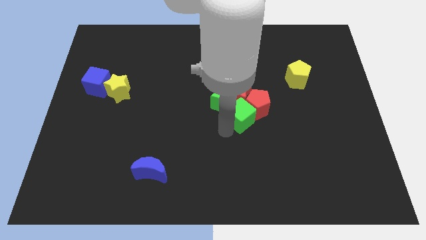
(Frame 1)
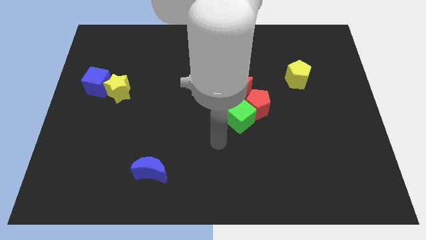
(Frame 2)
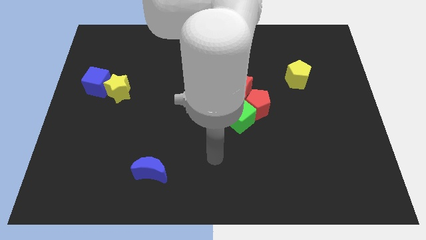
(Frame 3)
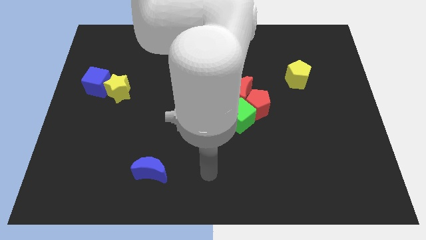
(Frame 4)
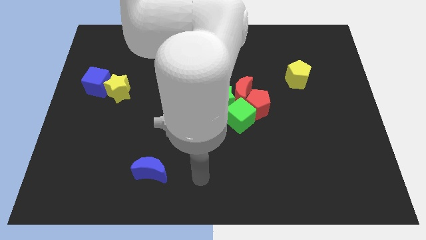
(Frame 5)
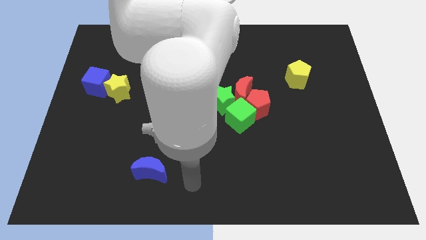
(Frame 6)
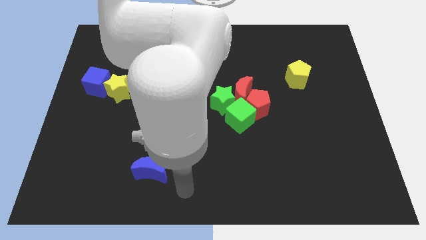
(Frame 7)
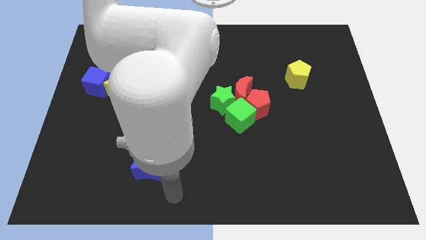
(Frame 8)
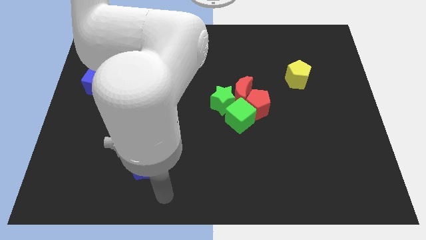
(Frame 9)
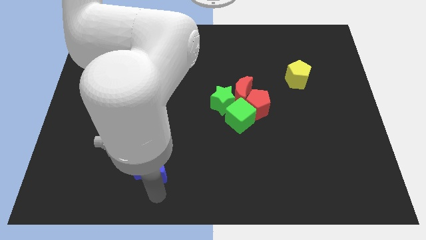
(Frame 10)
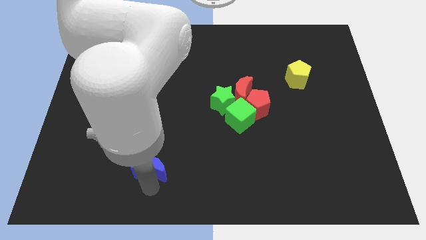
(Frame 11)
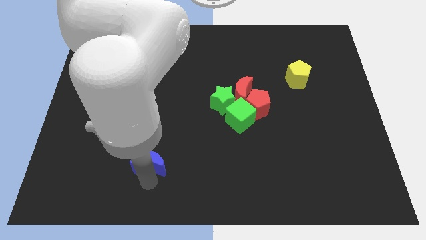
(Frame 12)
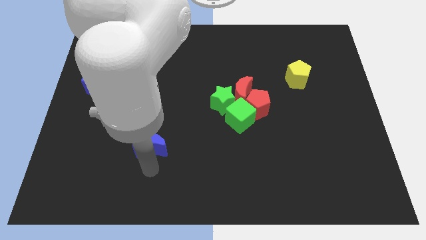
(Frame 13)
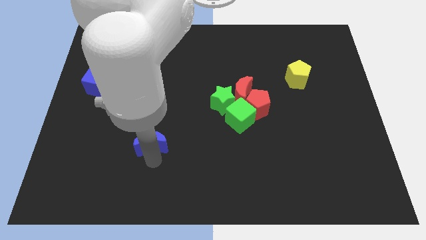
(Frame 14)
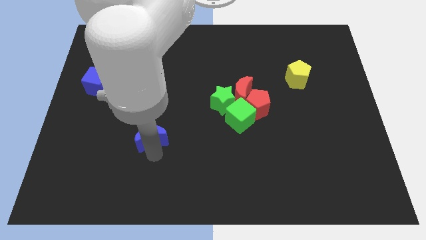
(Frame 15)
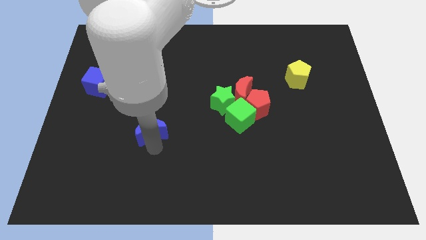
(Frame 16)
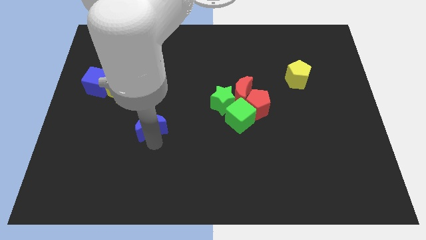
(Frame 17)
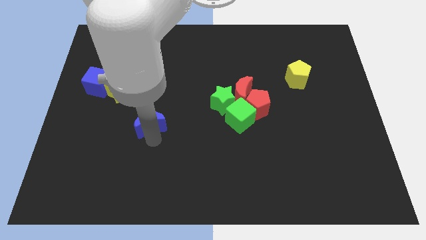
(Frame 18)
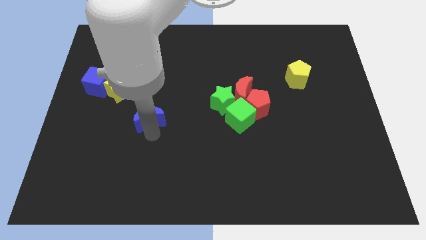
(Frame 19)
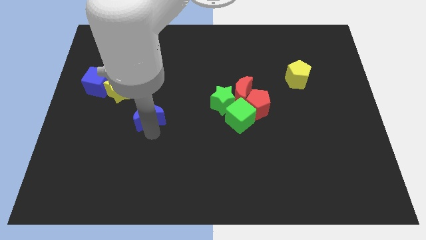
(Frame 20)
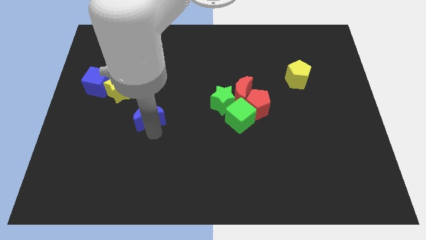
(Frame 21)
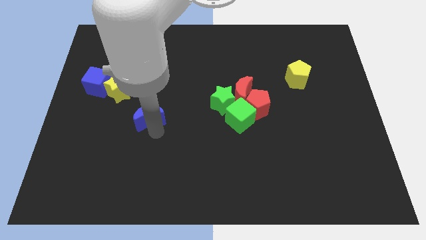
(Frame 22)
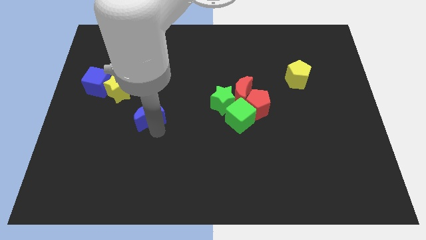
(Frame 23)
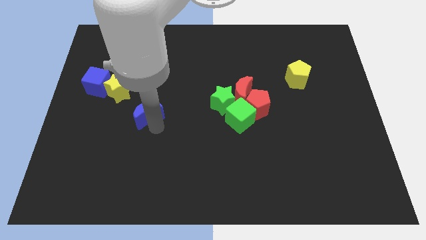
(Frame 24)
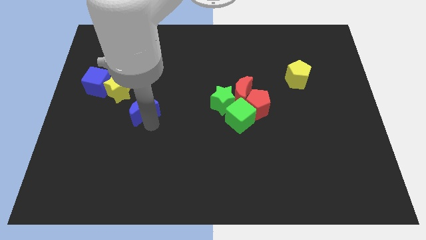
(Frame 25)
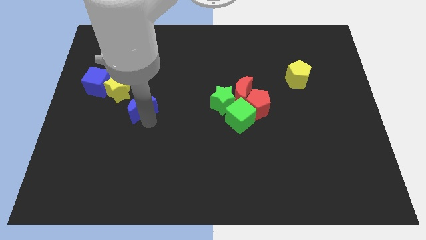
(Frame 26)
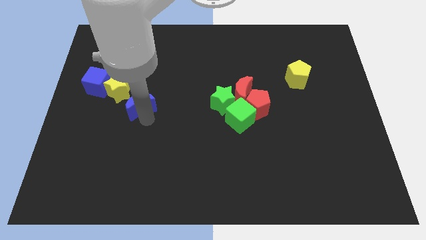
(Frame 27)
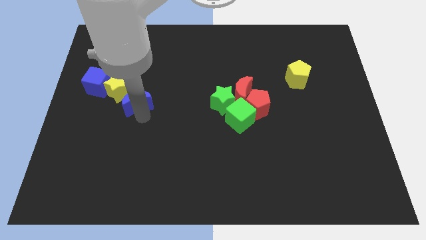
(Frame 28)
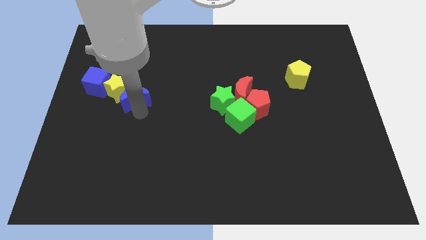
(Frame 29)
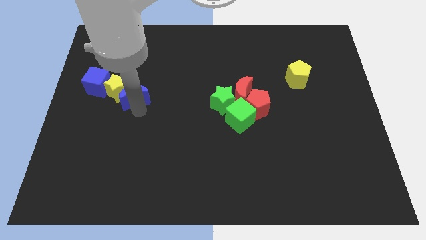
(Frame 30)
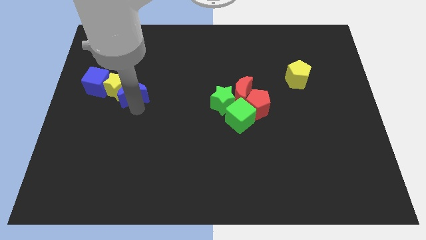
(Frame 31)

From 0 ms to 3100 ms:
move blue moon into yellow star

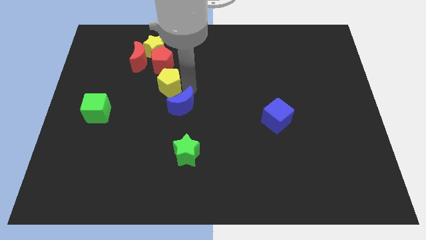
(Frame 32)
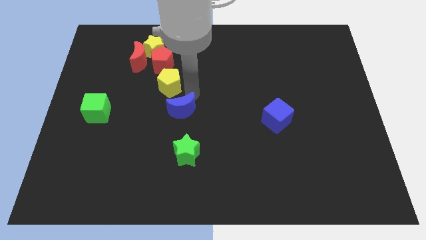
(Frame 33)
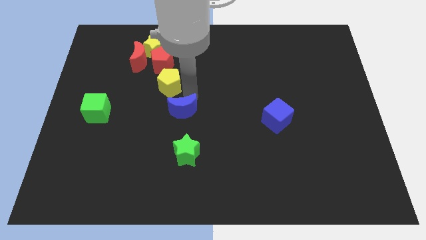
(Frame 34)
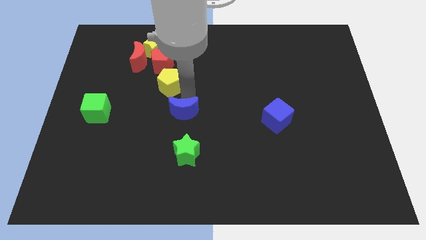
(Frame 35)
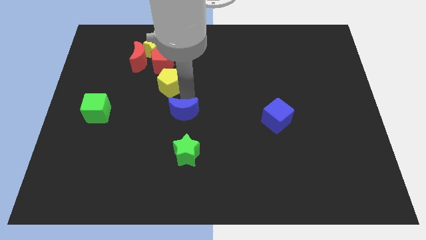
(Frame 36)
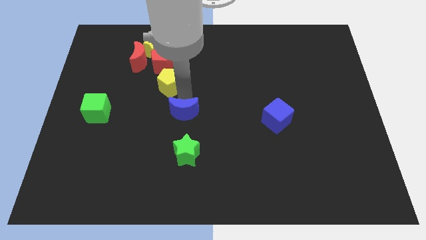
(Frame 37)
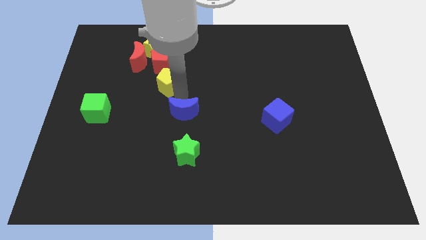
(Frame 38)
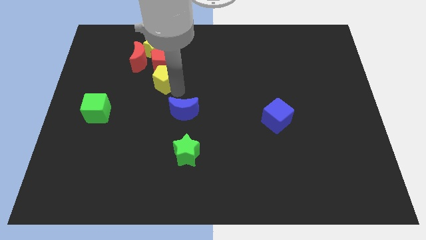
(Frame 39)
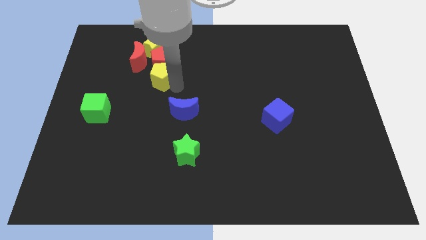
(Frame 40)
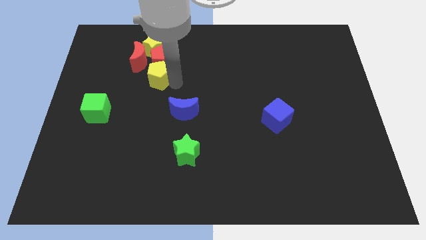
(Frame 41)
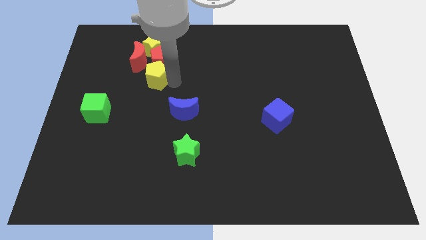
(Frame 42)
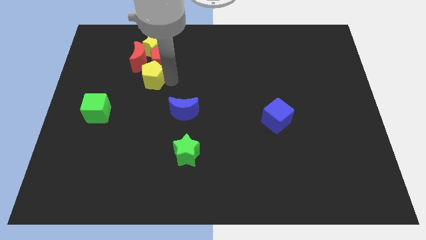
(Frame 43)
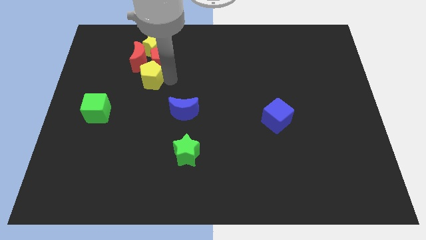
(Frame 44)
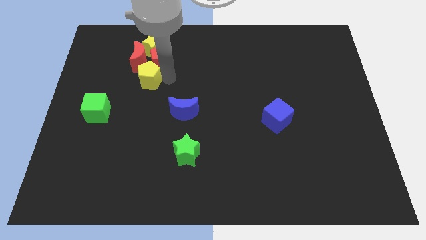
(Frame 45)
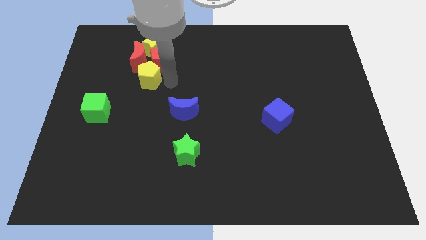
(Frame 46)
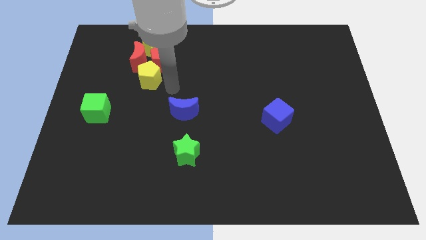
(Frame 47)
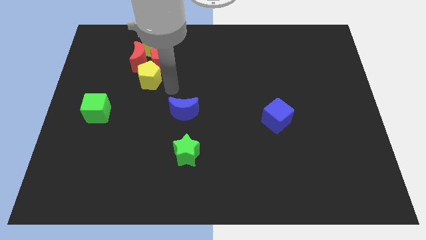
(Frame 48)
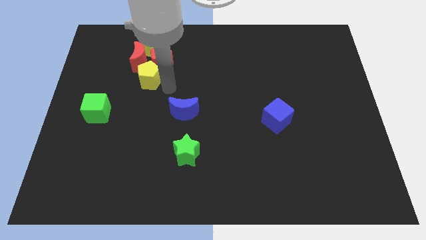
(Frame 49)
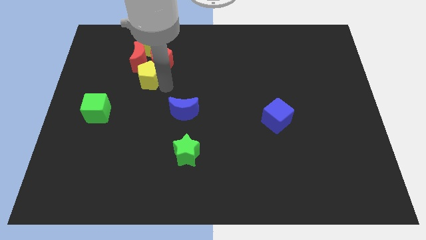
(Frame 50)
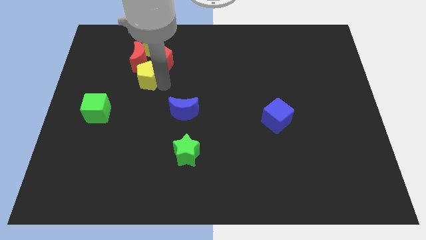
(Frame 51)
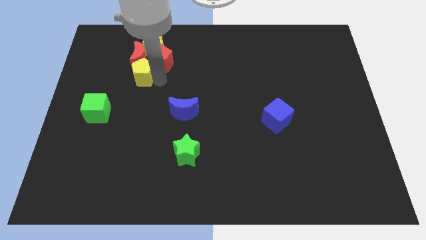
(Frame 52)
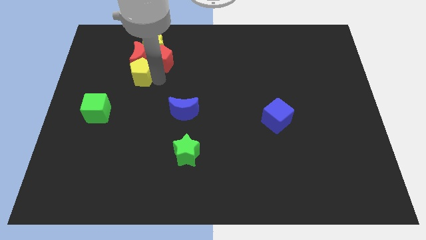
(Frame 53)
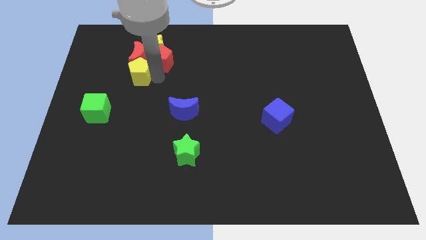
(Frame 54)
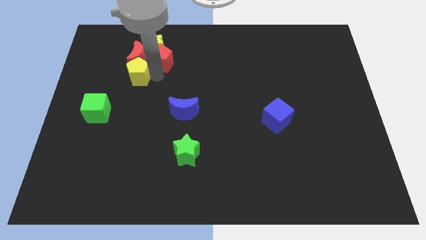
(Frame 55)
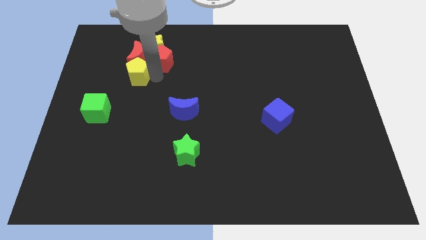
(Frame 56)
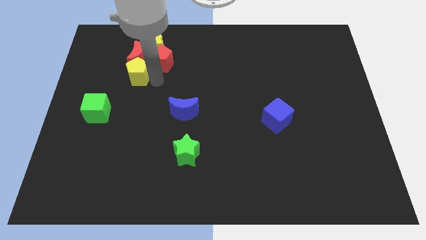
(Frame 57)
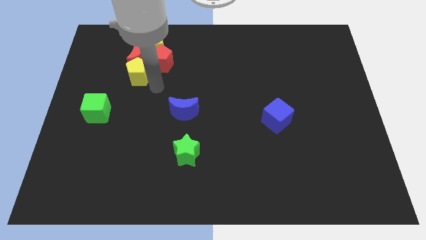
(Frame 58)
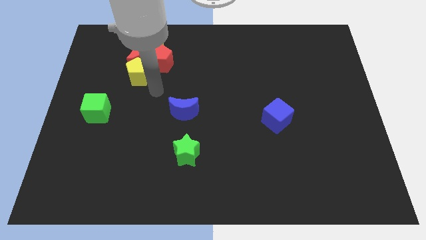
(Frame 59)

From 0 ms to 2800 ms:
separate blue moon from yellow pentagon

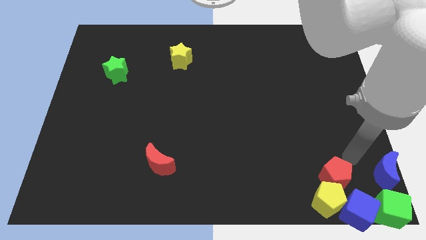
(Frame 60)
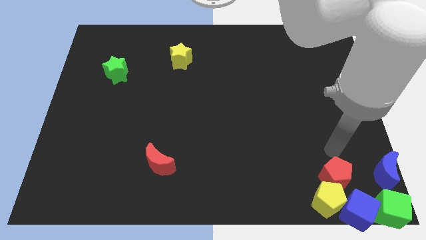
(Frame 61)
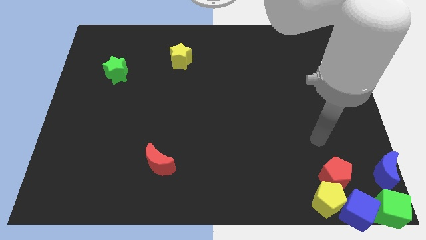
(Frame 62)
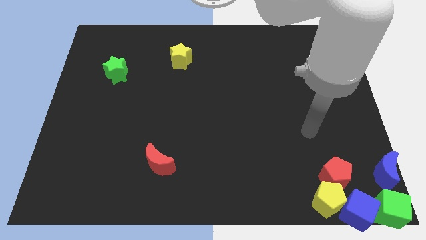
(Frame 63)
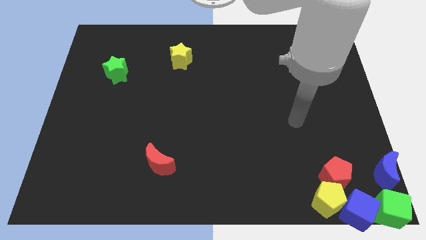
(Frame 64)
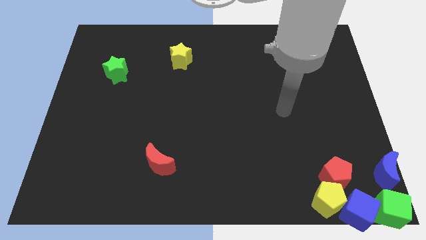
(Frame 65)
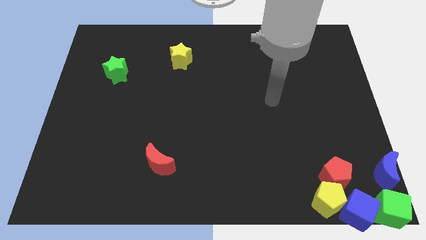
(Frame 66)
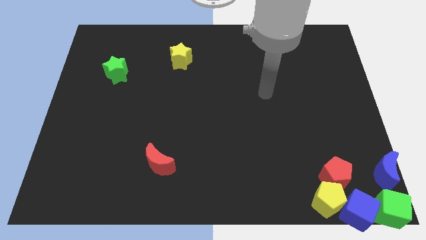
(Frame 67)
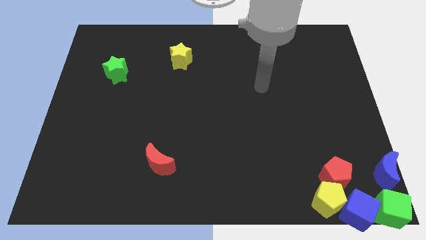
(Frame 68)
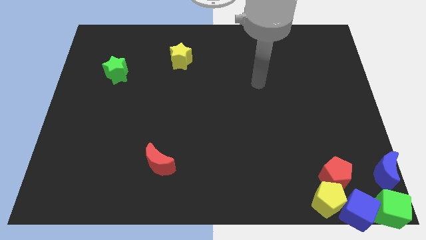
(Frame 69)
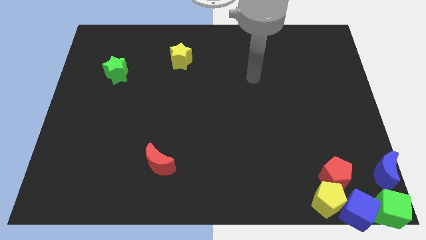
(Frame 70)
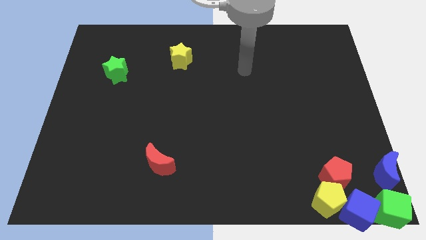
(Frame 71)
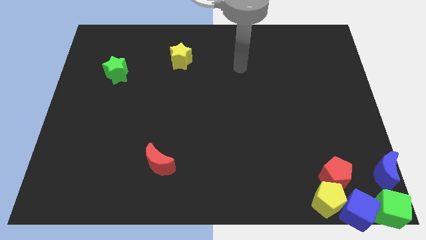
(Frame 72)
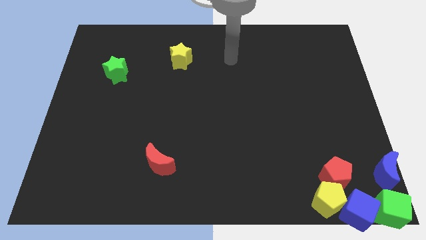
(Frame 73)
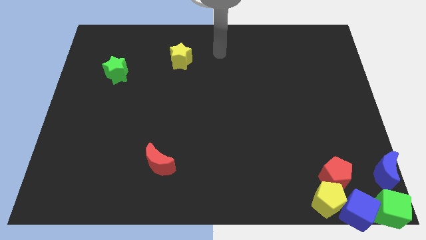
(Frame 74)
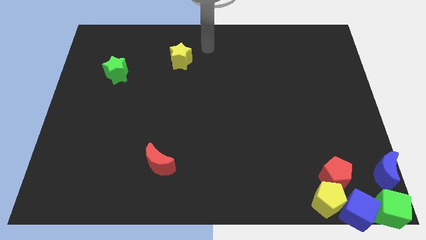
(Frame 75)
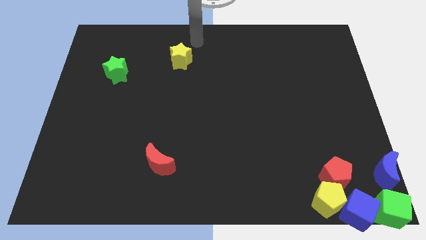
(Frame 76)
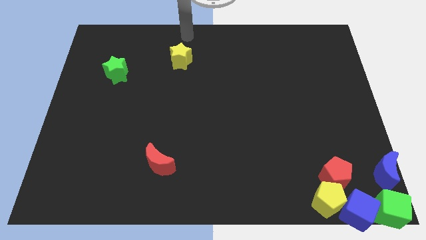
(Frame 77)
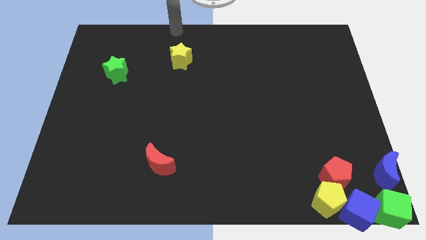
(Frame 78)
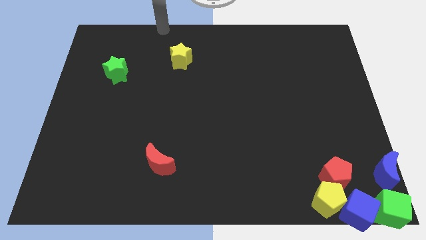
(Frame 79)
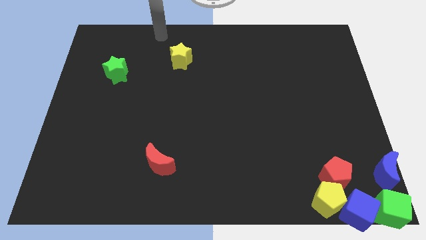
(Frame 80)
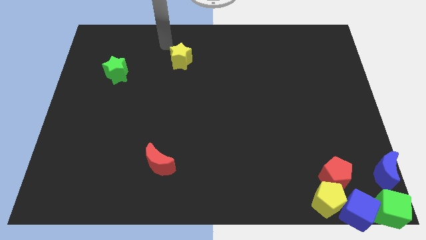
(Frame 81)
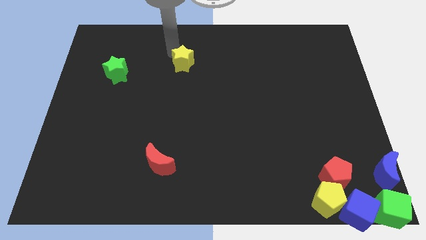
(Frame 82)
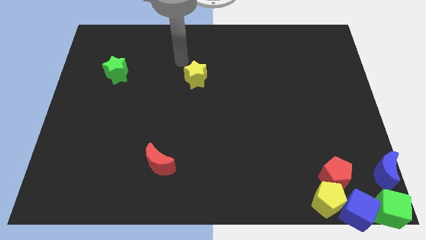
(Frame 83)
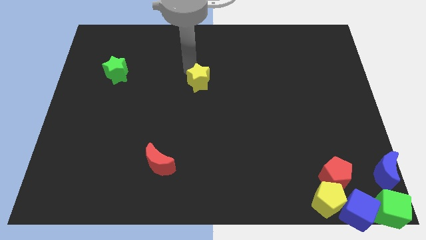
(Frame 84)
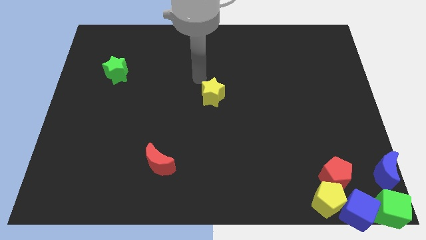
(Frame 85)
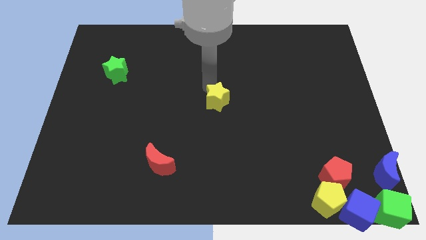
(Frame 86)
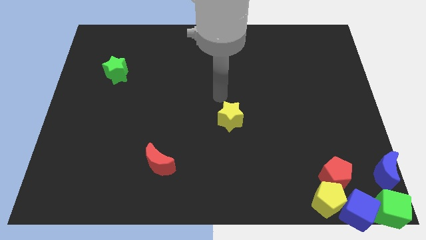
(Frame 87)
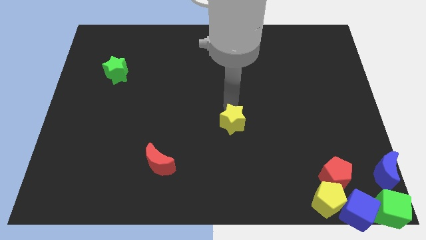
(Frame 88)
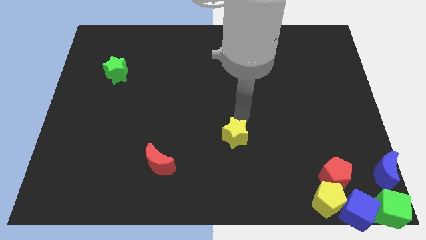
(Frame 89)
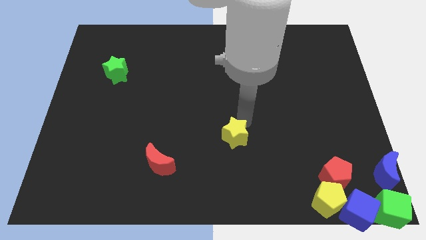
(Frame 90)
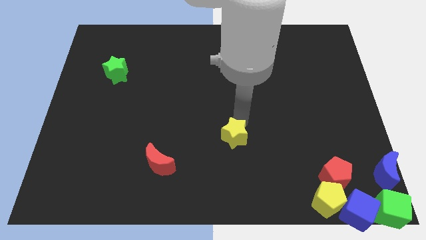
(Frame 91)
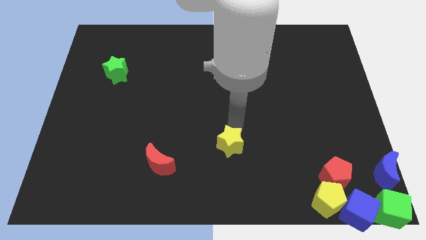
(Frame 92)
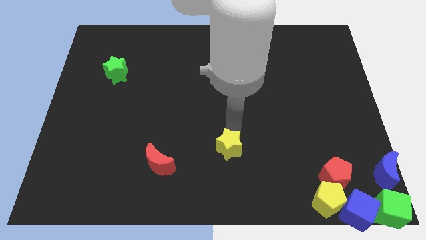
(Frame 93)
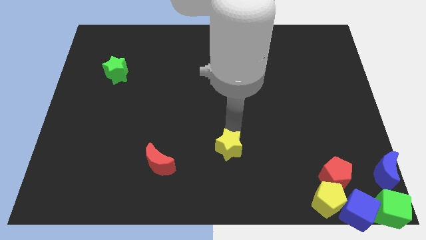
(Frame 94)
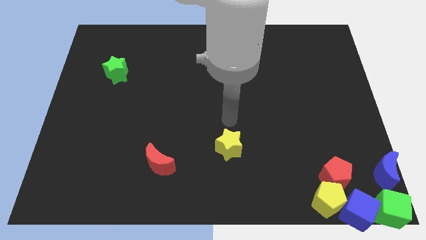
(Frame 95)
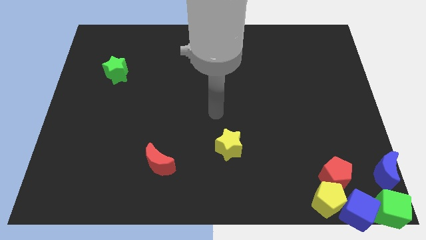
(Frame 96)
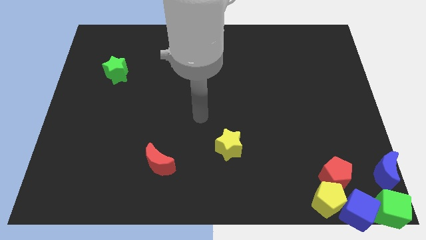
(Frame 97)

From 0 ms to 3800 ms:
place the yellow star to the right of the red crescent
